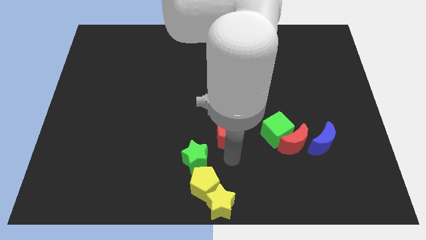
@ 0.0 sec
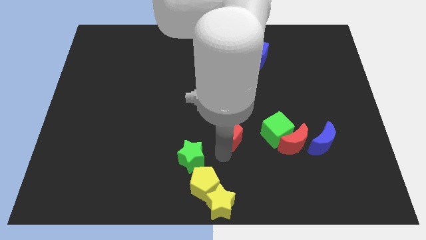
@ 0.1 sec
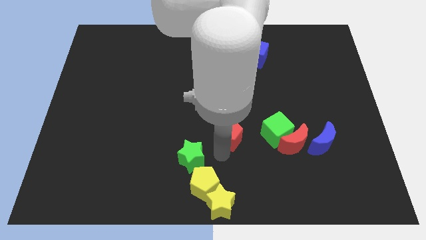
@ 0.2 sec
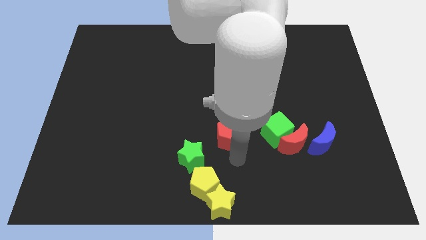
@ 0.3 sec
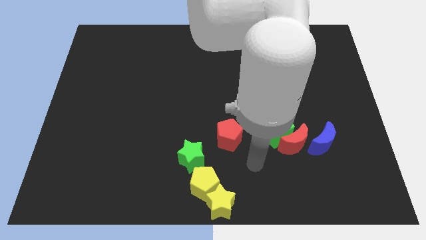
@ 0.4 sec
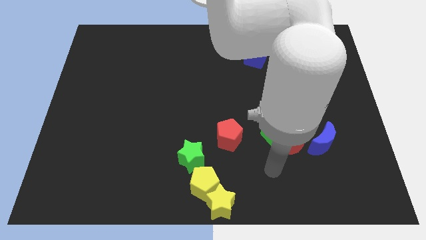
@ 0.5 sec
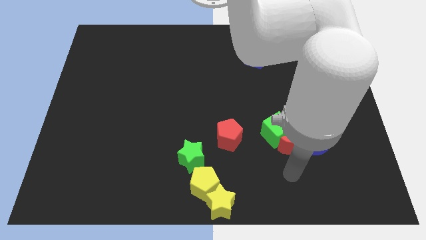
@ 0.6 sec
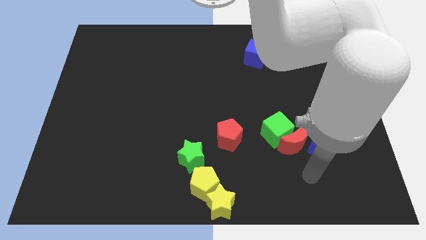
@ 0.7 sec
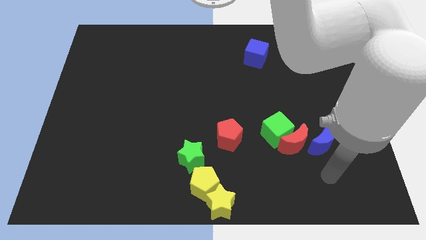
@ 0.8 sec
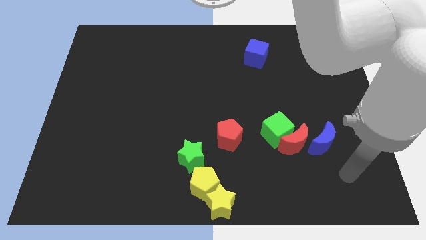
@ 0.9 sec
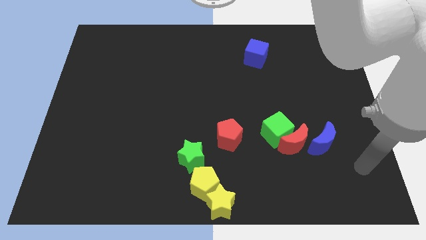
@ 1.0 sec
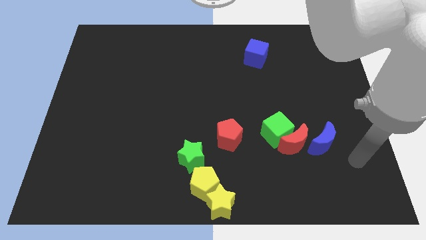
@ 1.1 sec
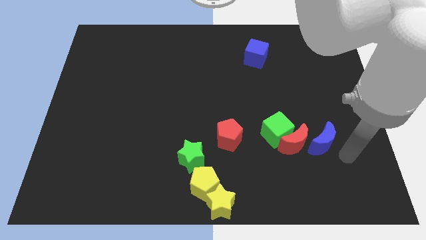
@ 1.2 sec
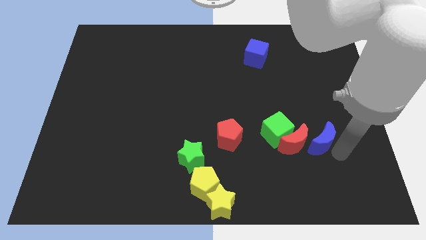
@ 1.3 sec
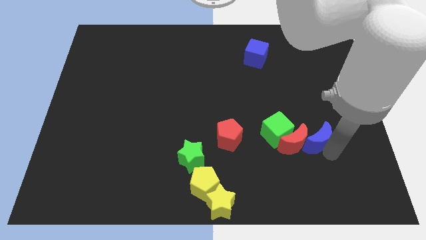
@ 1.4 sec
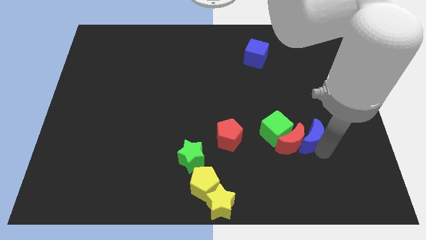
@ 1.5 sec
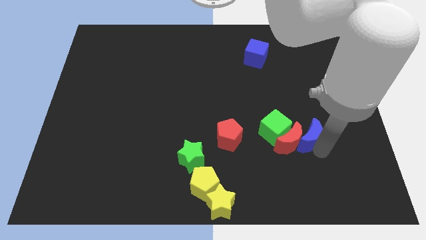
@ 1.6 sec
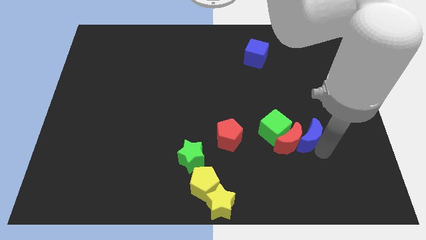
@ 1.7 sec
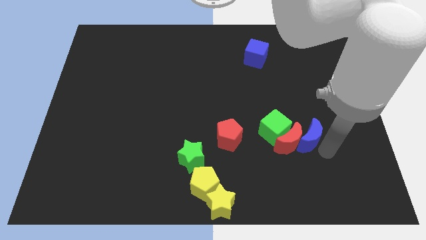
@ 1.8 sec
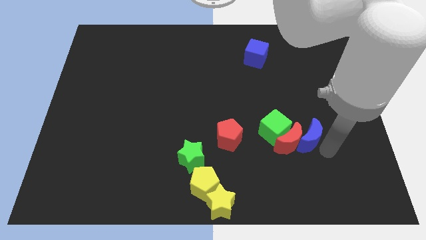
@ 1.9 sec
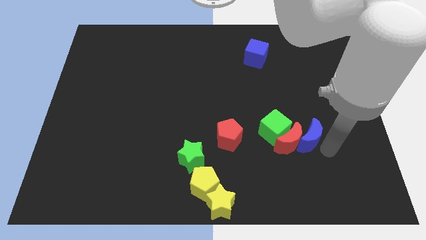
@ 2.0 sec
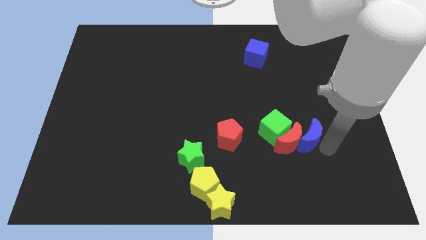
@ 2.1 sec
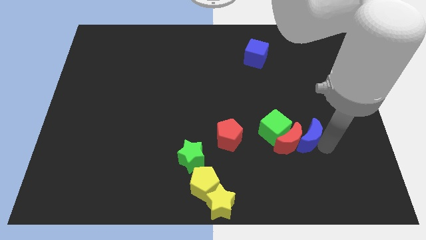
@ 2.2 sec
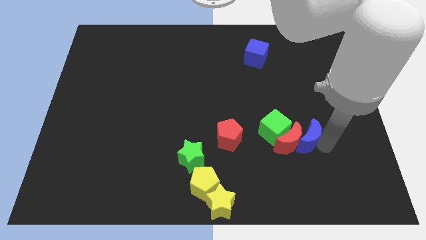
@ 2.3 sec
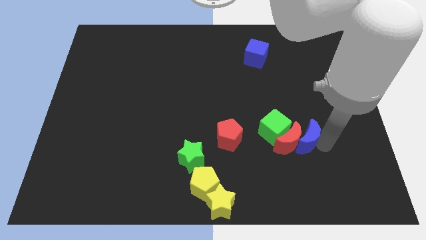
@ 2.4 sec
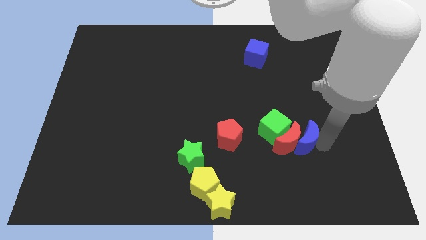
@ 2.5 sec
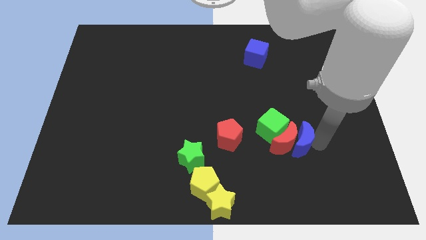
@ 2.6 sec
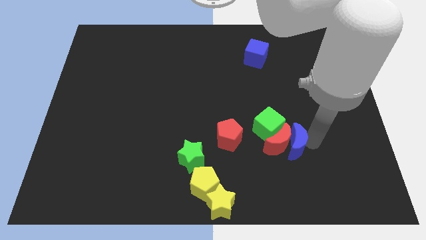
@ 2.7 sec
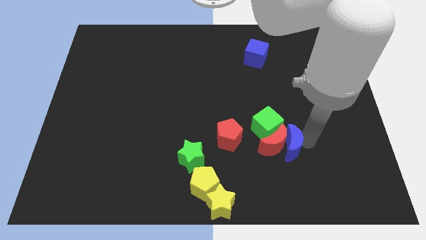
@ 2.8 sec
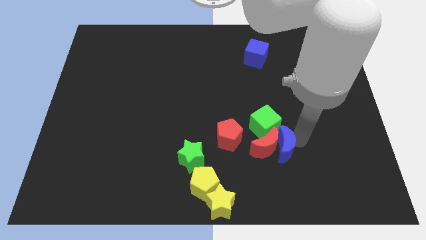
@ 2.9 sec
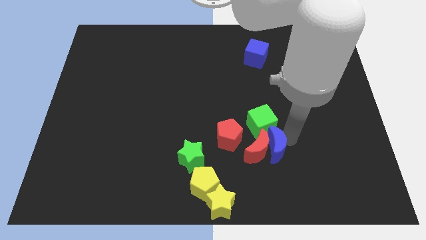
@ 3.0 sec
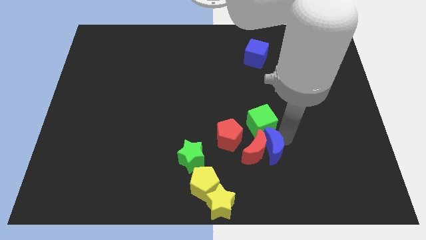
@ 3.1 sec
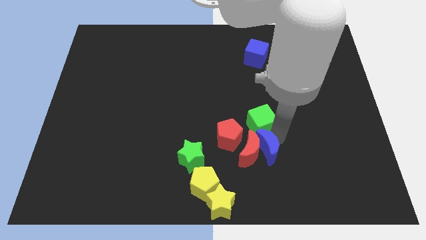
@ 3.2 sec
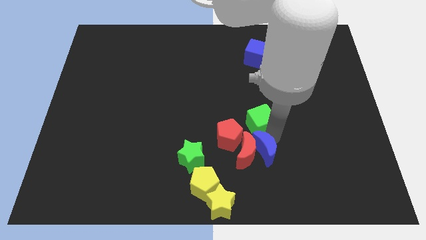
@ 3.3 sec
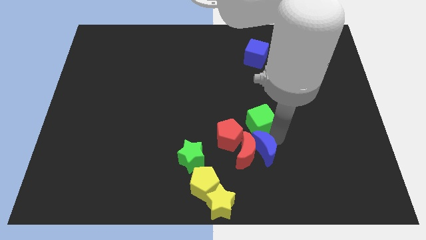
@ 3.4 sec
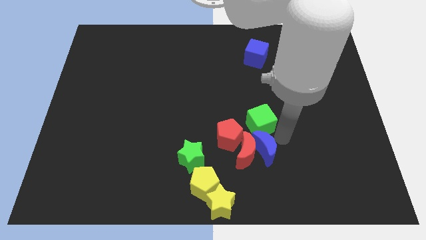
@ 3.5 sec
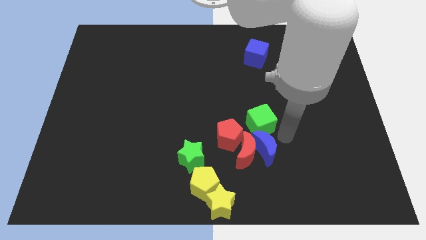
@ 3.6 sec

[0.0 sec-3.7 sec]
move the blue crescent into the red pentagon and red crescent

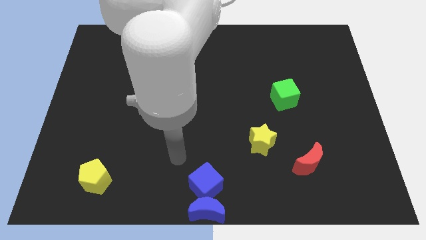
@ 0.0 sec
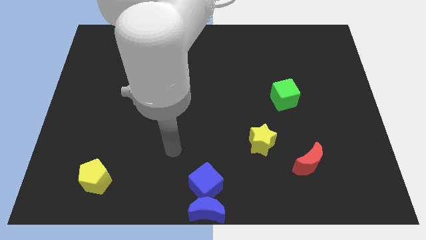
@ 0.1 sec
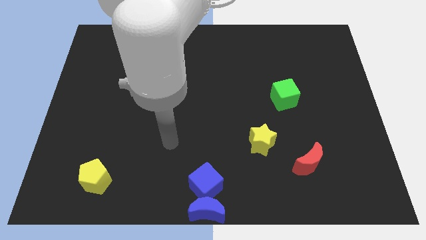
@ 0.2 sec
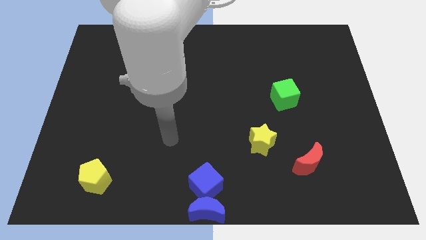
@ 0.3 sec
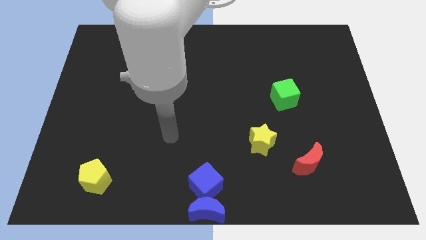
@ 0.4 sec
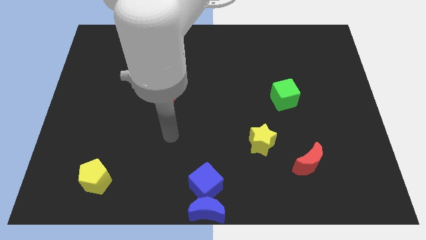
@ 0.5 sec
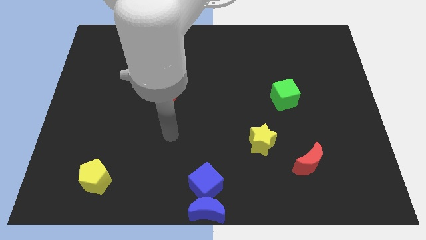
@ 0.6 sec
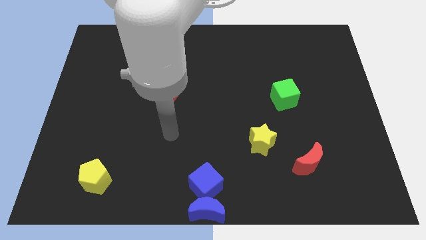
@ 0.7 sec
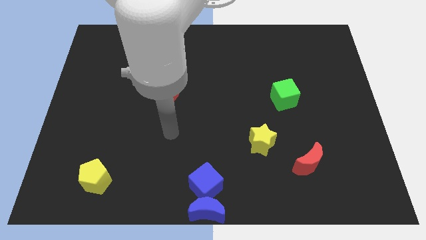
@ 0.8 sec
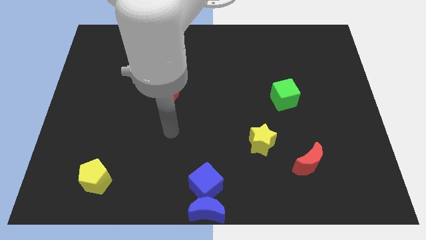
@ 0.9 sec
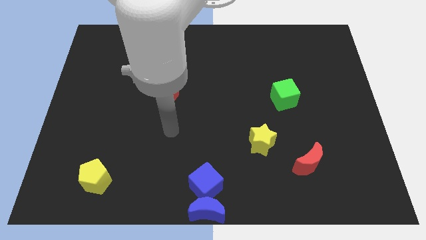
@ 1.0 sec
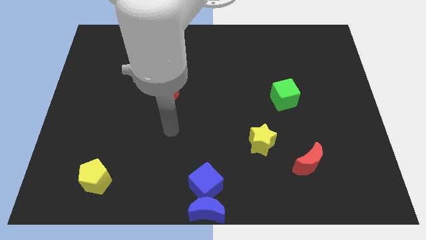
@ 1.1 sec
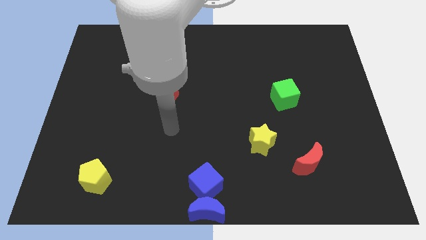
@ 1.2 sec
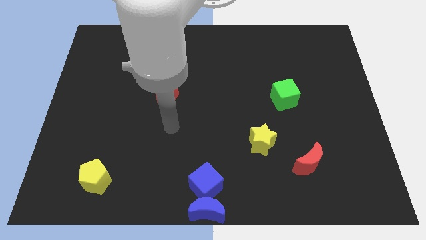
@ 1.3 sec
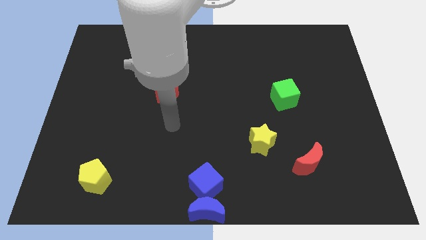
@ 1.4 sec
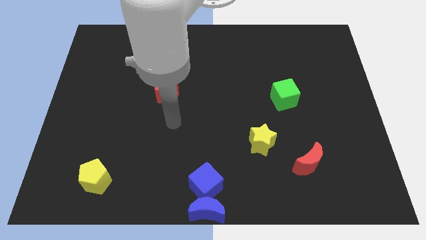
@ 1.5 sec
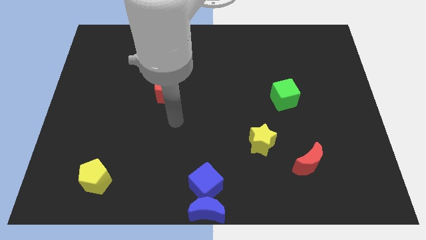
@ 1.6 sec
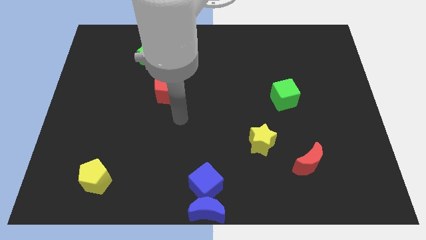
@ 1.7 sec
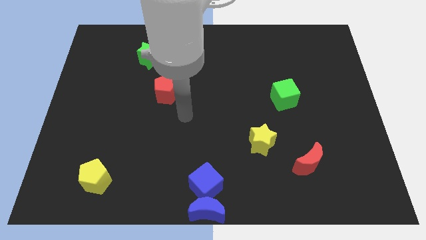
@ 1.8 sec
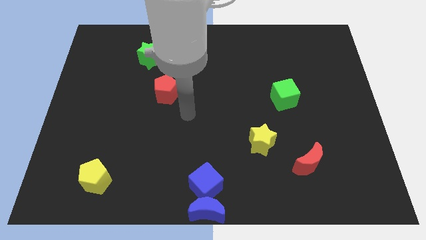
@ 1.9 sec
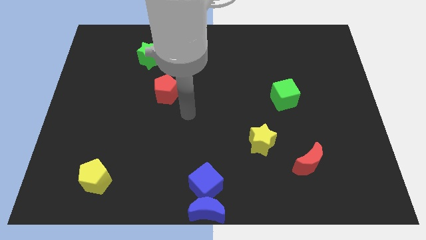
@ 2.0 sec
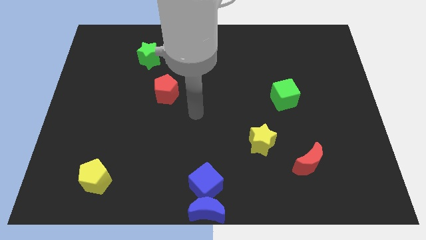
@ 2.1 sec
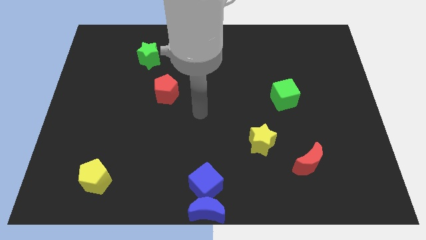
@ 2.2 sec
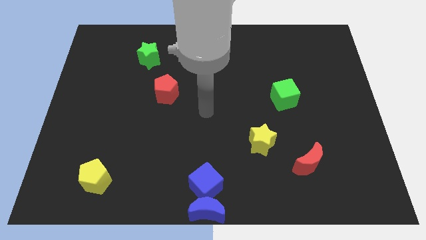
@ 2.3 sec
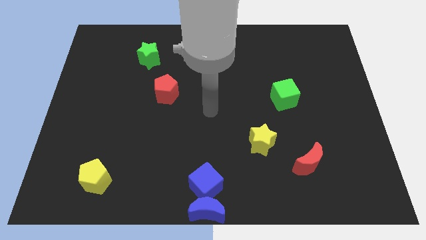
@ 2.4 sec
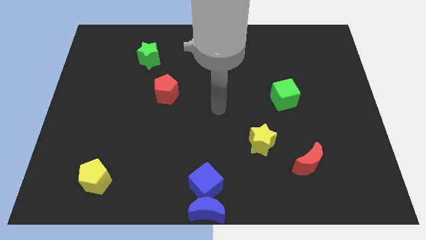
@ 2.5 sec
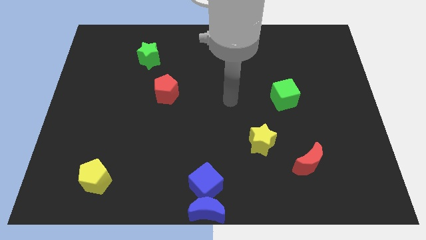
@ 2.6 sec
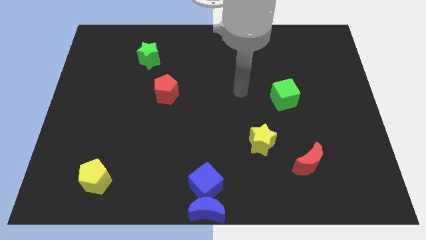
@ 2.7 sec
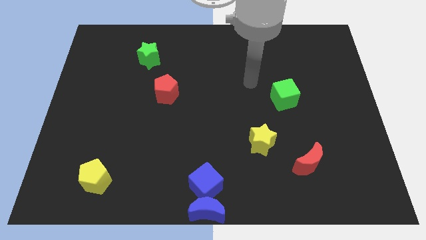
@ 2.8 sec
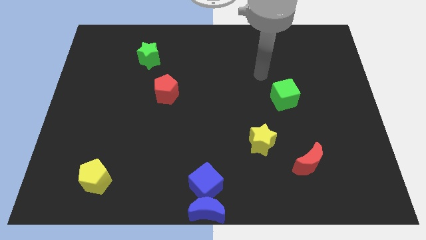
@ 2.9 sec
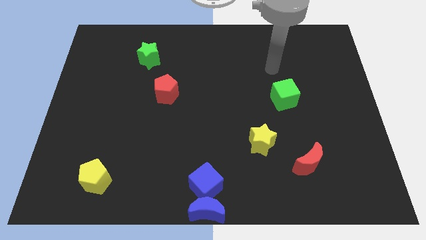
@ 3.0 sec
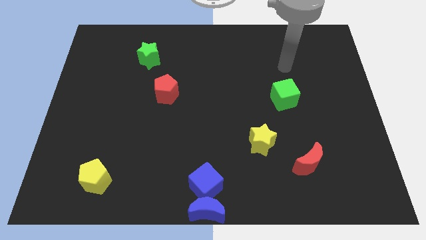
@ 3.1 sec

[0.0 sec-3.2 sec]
point your arm at the top of the green cube

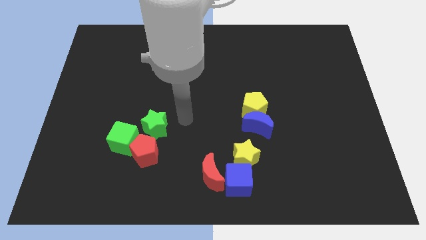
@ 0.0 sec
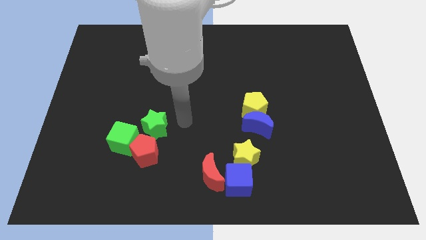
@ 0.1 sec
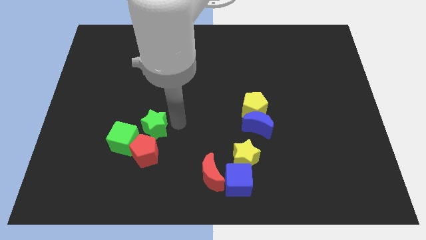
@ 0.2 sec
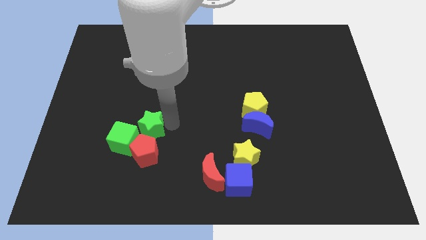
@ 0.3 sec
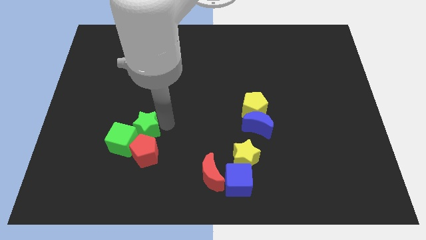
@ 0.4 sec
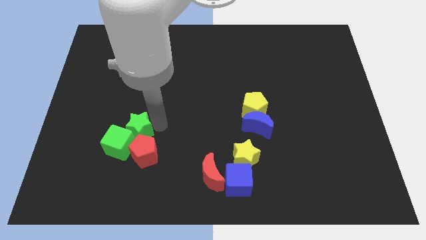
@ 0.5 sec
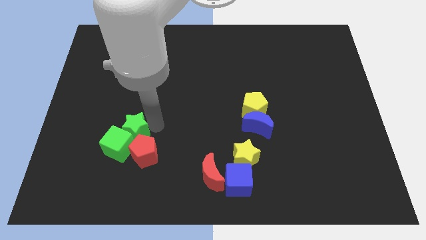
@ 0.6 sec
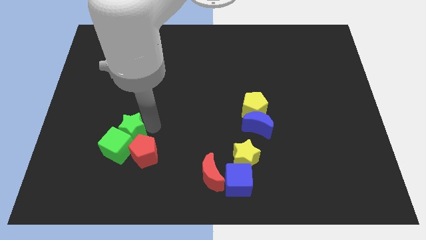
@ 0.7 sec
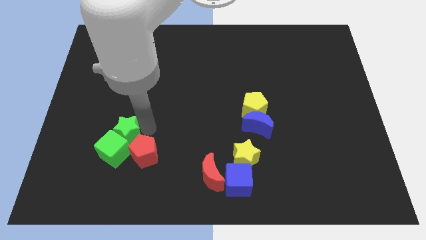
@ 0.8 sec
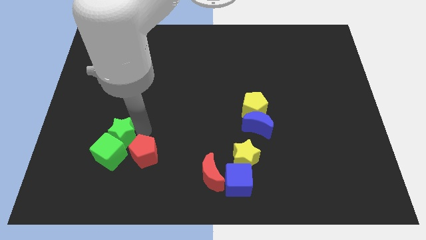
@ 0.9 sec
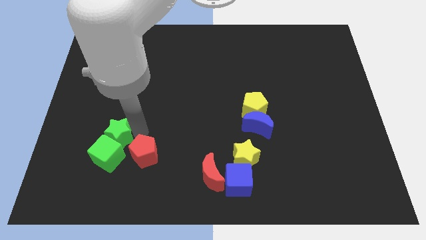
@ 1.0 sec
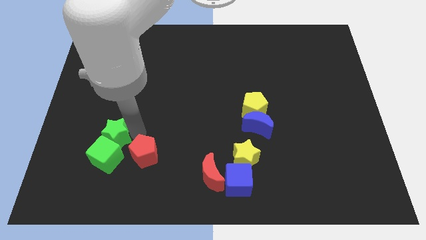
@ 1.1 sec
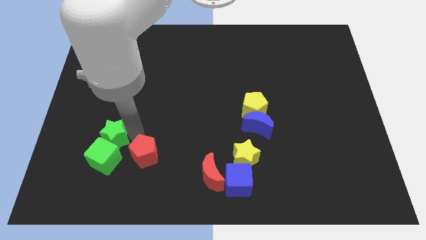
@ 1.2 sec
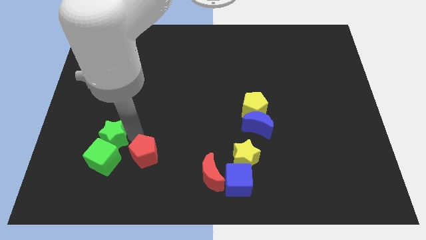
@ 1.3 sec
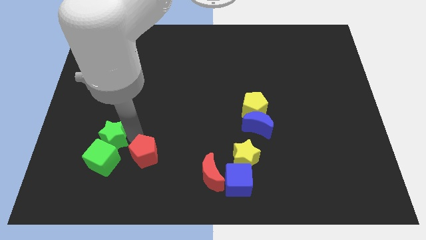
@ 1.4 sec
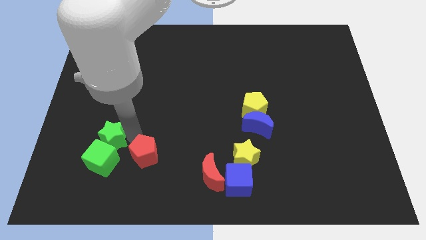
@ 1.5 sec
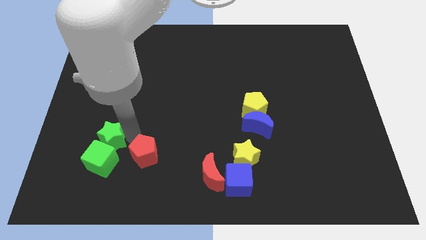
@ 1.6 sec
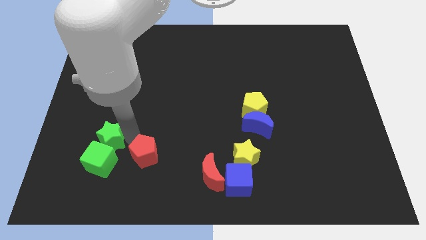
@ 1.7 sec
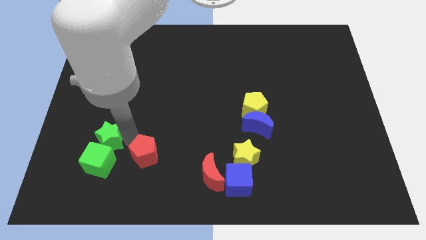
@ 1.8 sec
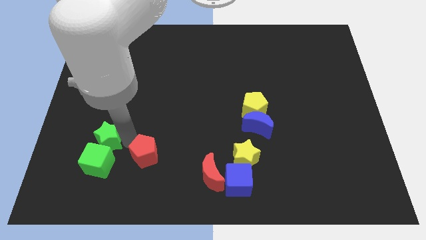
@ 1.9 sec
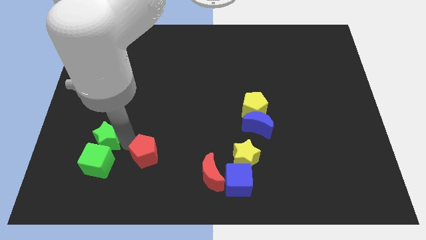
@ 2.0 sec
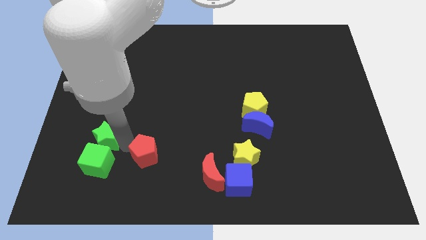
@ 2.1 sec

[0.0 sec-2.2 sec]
move the green star and the green cube towards left
